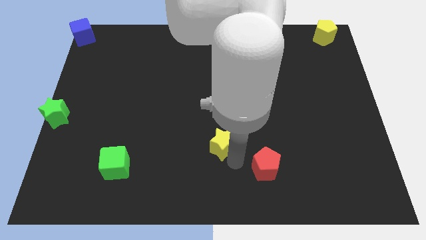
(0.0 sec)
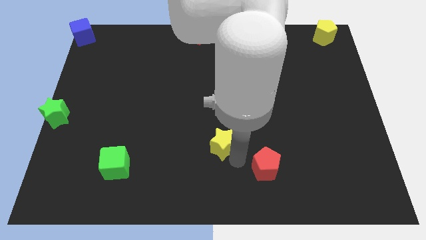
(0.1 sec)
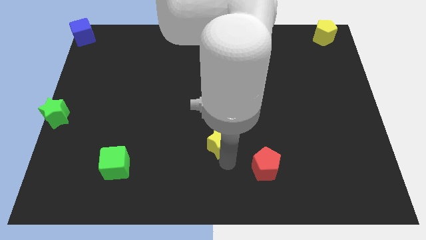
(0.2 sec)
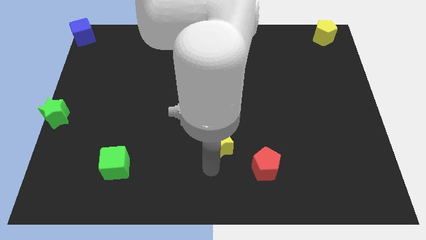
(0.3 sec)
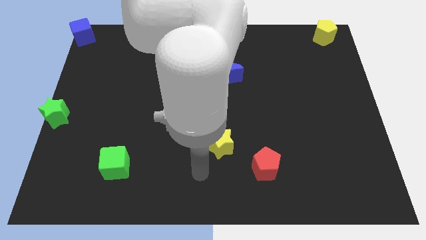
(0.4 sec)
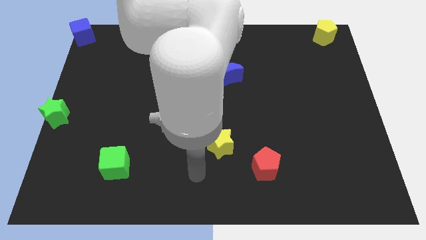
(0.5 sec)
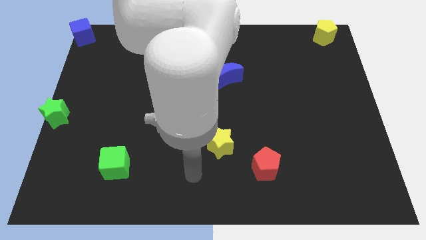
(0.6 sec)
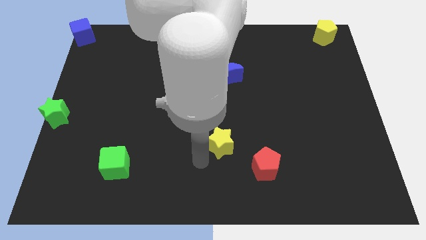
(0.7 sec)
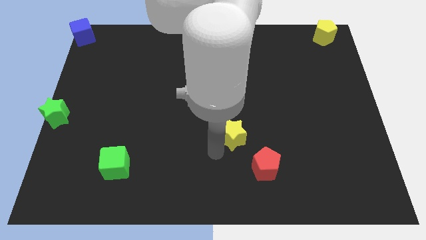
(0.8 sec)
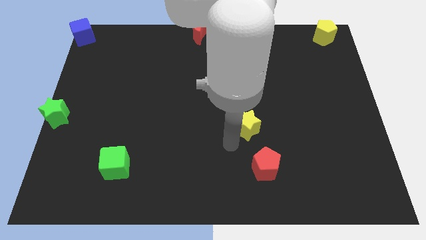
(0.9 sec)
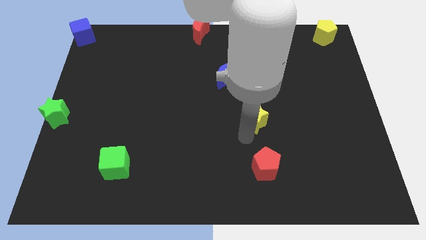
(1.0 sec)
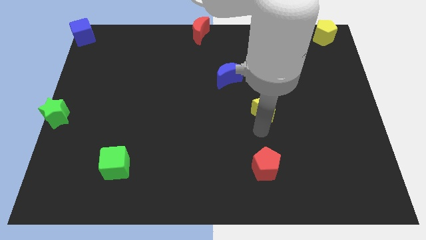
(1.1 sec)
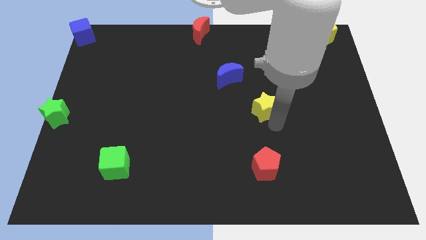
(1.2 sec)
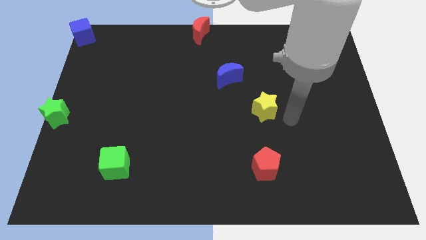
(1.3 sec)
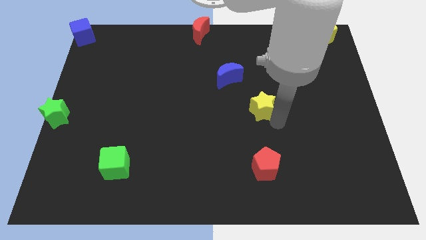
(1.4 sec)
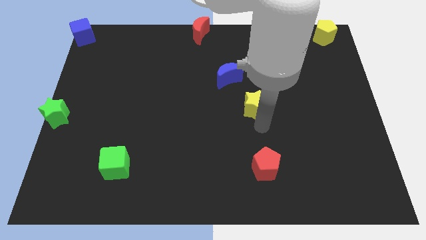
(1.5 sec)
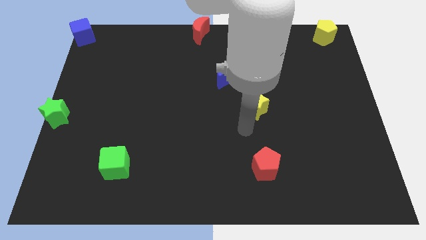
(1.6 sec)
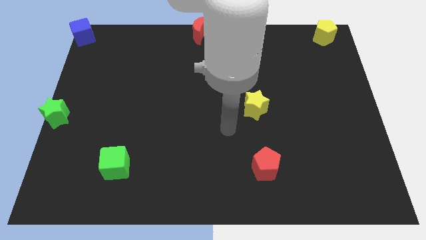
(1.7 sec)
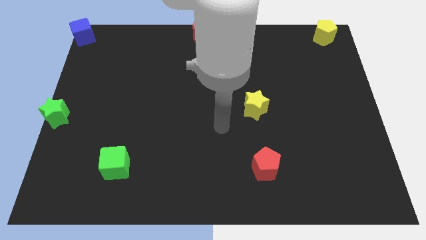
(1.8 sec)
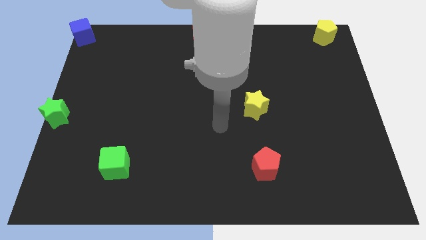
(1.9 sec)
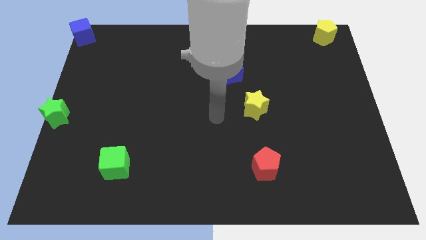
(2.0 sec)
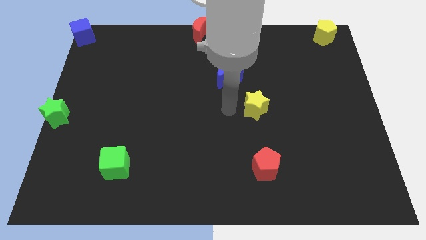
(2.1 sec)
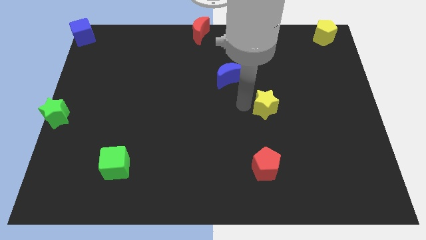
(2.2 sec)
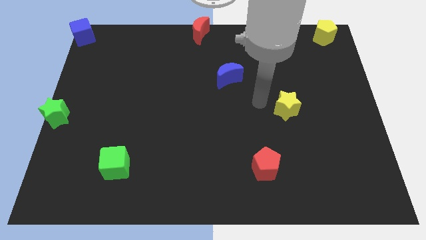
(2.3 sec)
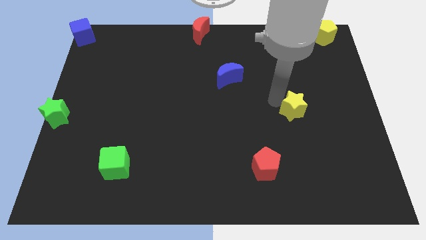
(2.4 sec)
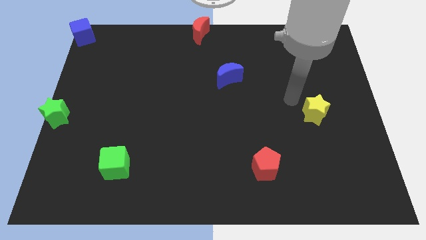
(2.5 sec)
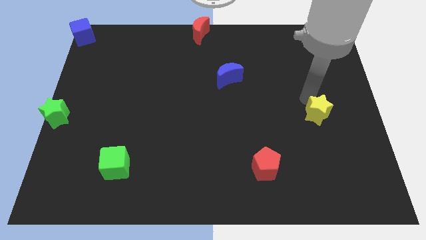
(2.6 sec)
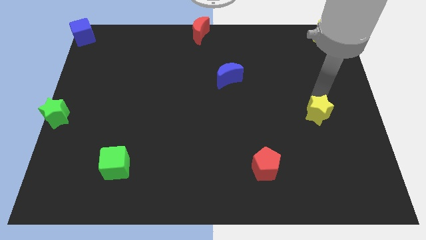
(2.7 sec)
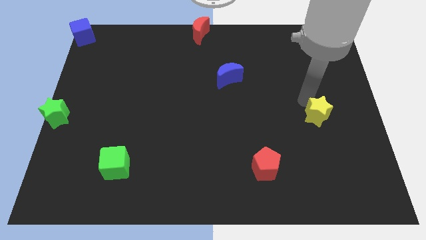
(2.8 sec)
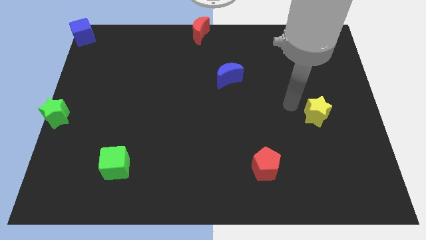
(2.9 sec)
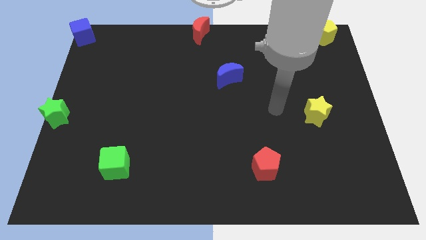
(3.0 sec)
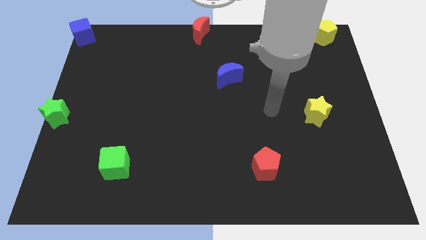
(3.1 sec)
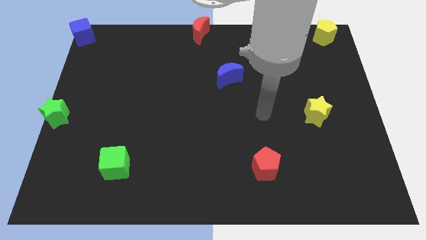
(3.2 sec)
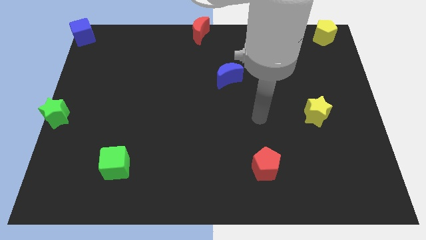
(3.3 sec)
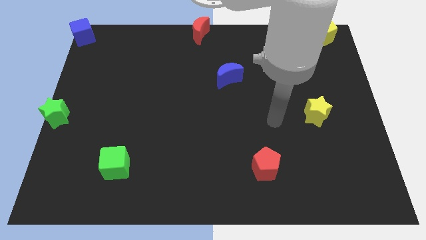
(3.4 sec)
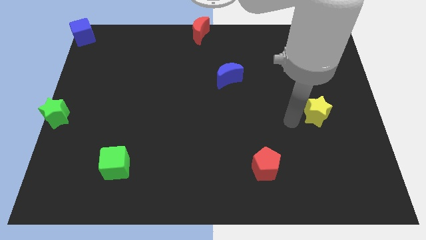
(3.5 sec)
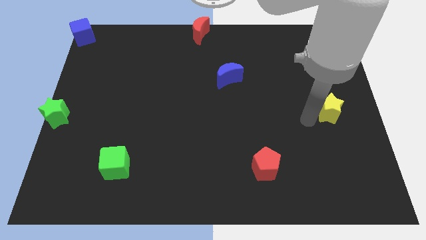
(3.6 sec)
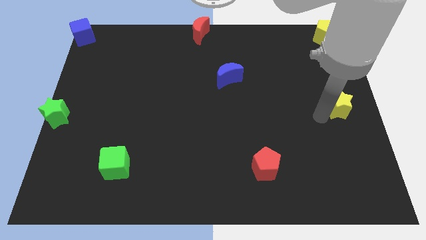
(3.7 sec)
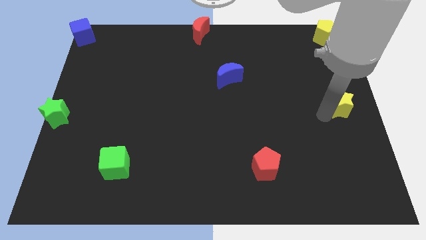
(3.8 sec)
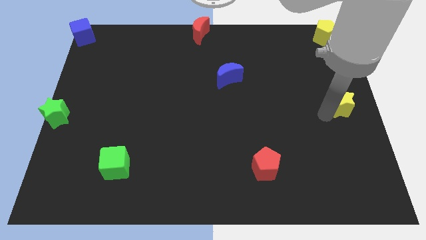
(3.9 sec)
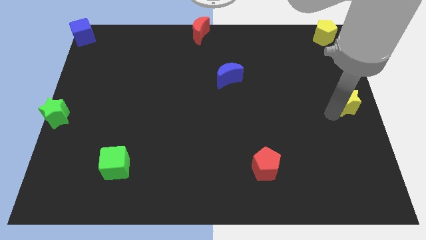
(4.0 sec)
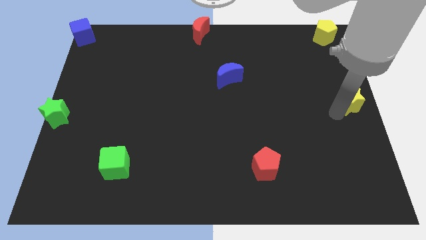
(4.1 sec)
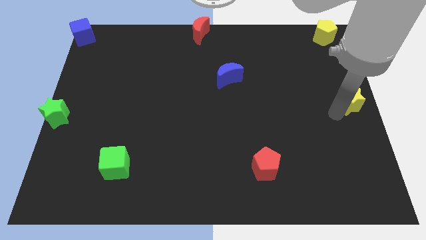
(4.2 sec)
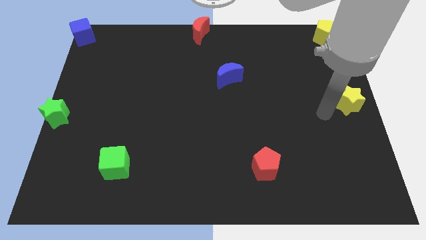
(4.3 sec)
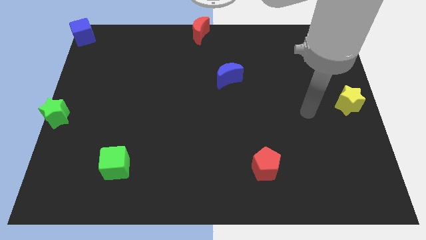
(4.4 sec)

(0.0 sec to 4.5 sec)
place the yellow star to the center right of the board

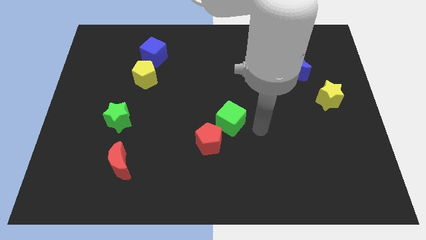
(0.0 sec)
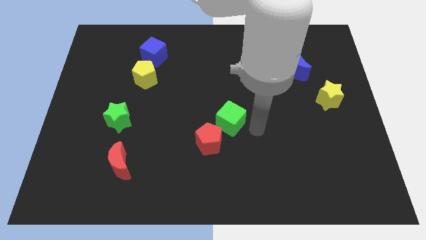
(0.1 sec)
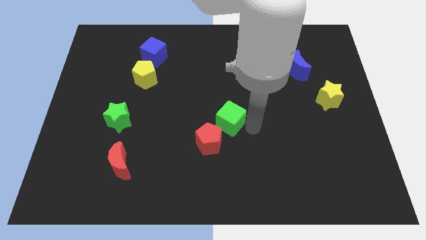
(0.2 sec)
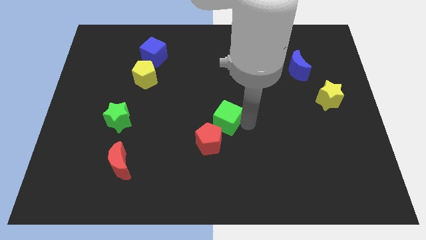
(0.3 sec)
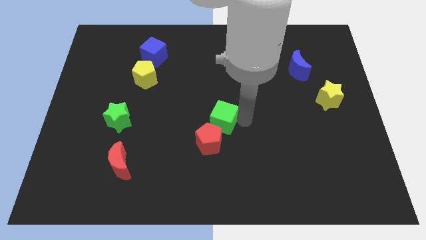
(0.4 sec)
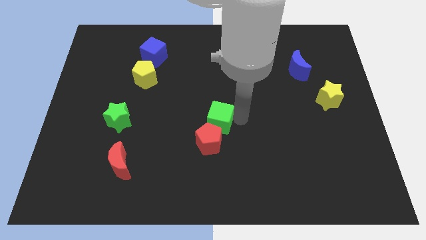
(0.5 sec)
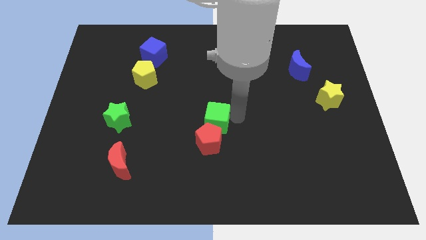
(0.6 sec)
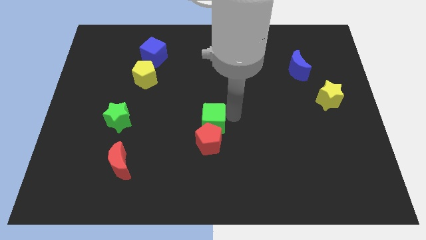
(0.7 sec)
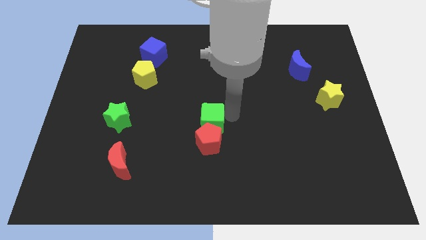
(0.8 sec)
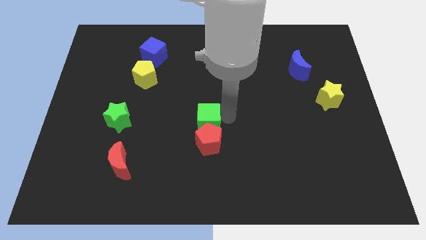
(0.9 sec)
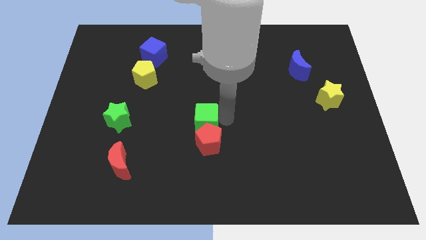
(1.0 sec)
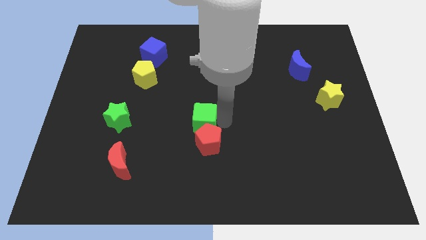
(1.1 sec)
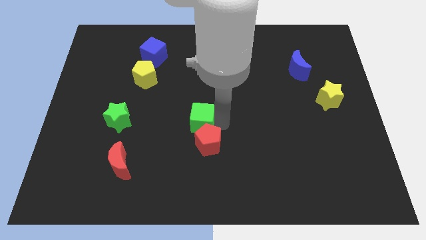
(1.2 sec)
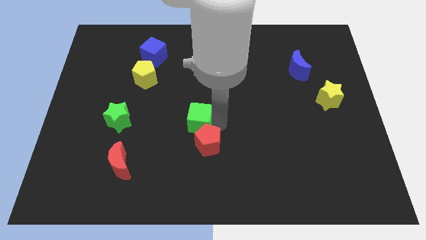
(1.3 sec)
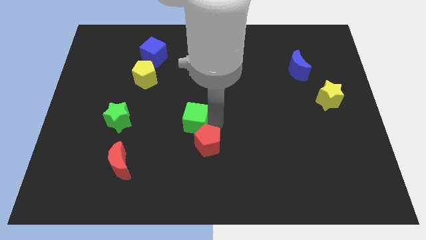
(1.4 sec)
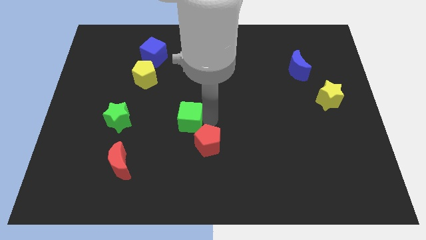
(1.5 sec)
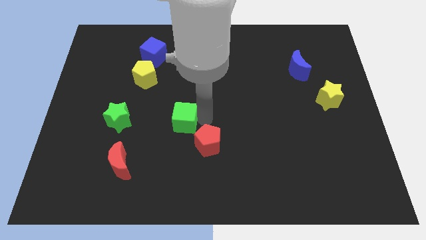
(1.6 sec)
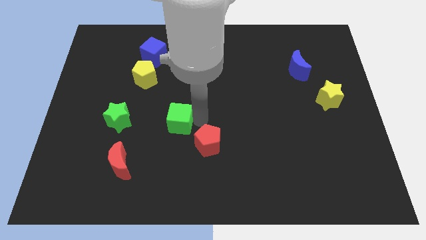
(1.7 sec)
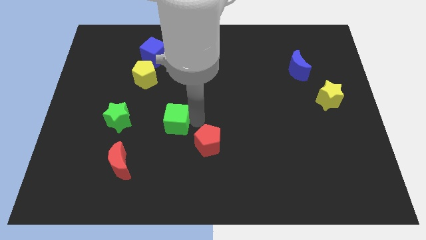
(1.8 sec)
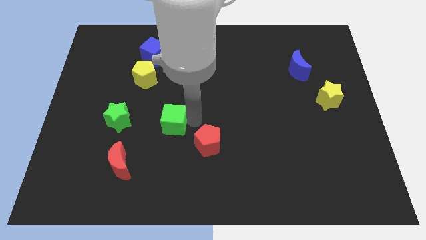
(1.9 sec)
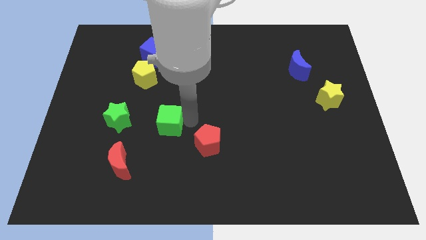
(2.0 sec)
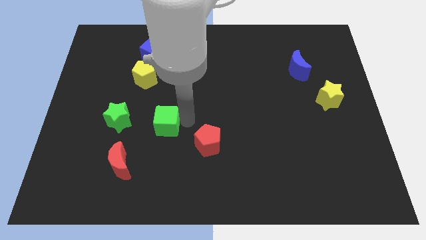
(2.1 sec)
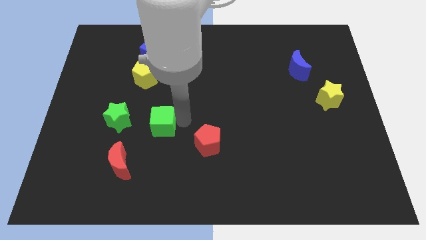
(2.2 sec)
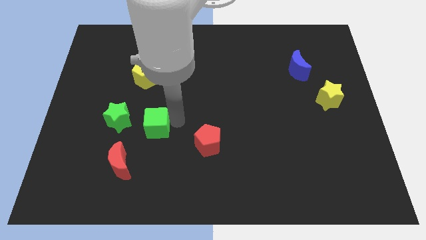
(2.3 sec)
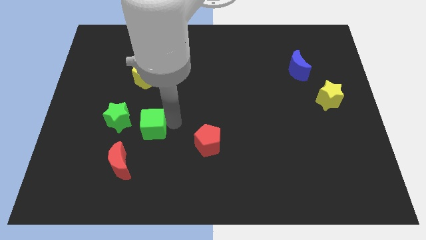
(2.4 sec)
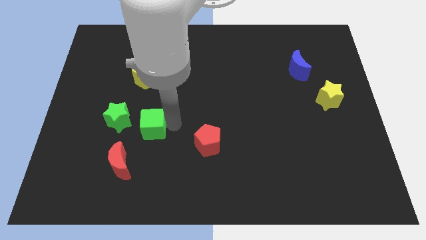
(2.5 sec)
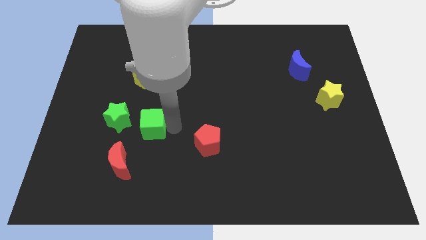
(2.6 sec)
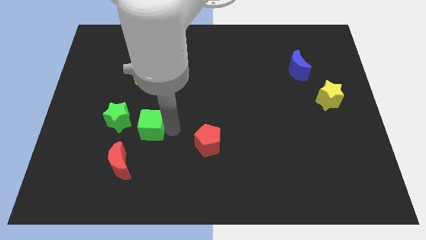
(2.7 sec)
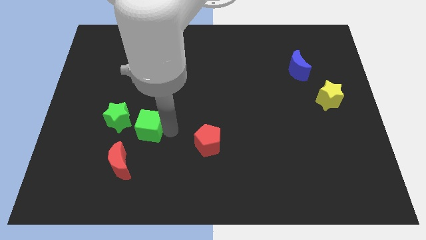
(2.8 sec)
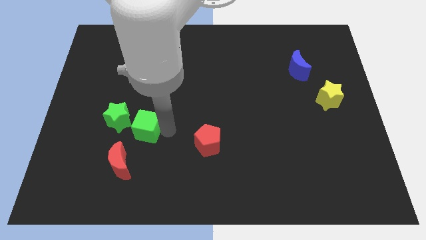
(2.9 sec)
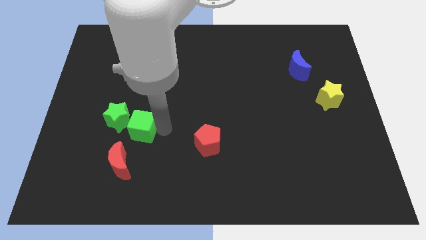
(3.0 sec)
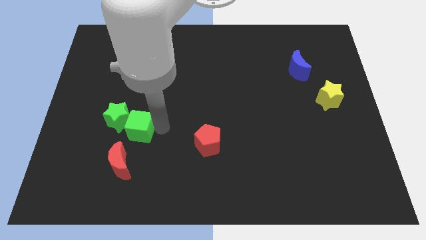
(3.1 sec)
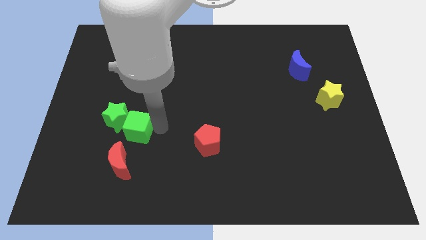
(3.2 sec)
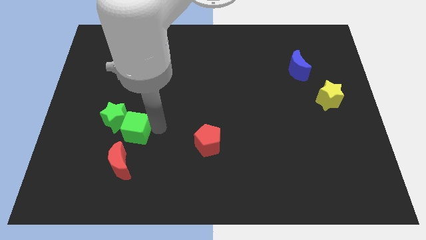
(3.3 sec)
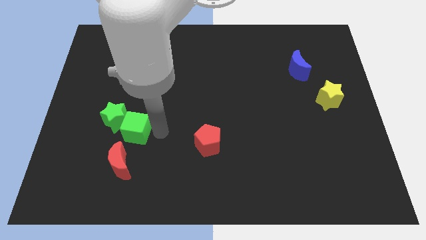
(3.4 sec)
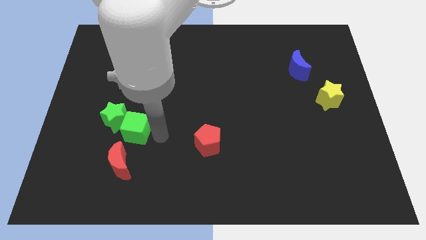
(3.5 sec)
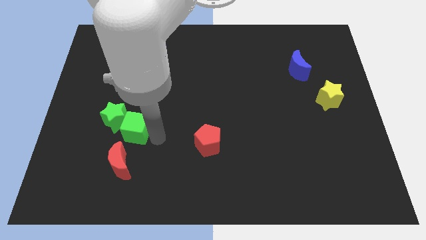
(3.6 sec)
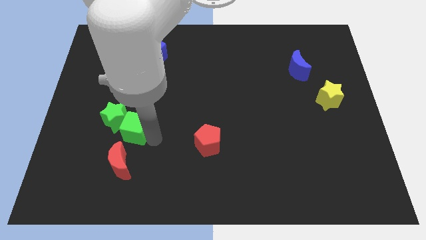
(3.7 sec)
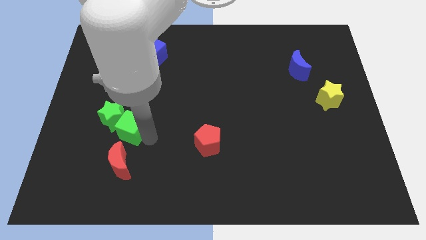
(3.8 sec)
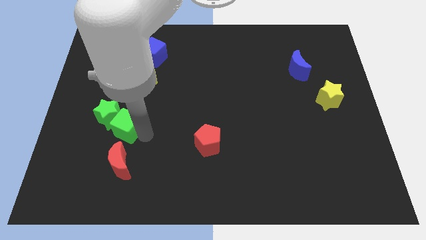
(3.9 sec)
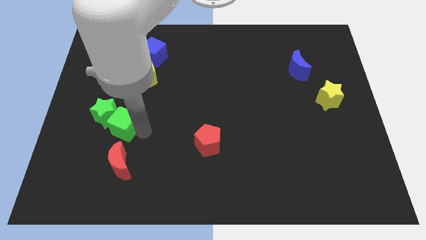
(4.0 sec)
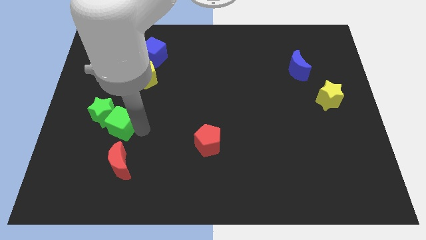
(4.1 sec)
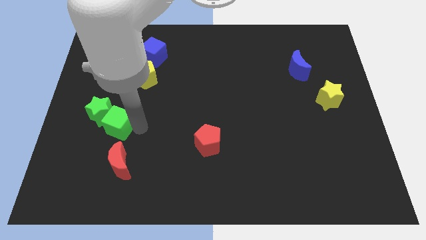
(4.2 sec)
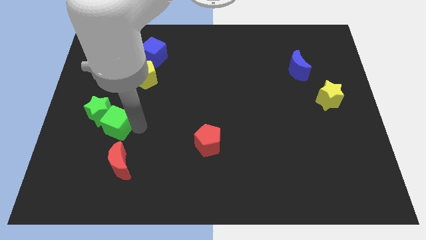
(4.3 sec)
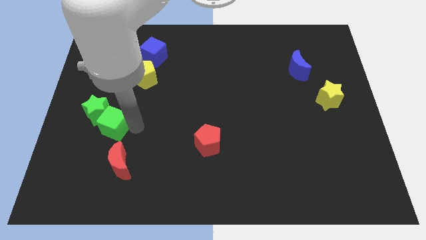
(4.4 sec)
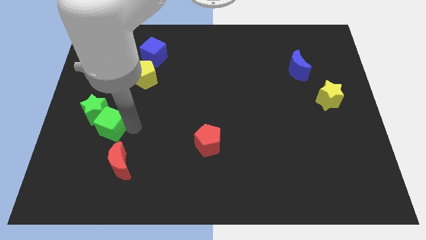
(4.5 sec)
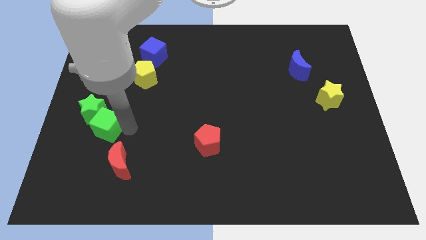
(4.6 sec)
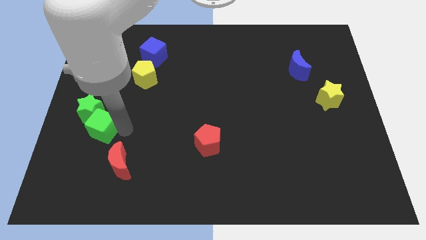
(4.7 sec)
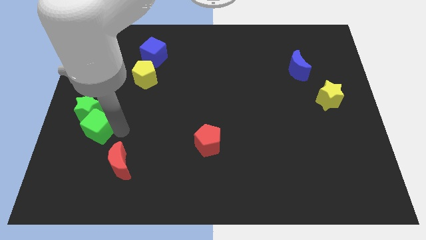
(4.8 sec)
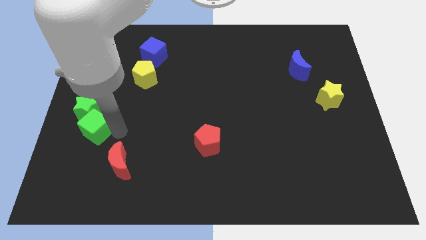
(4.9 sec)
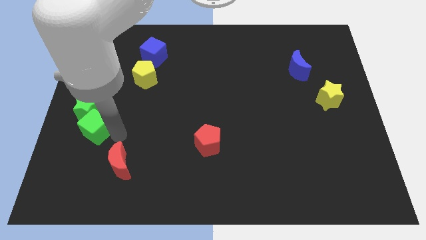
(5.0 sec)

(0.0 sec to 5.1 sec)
push the green cube into the green star
